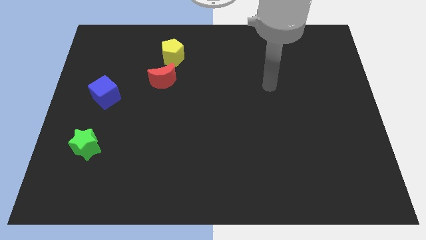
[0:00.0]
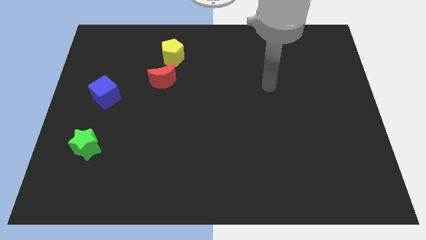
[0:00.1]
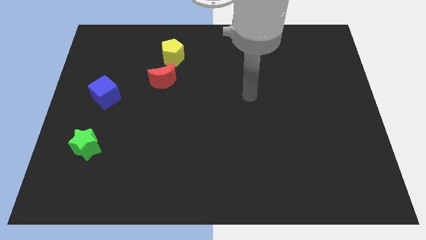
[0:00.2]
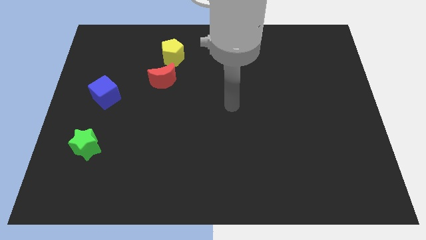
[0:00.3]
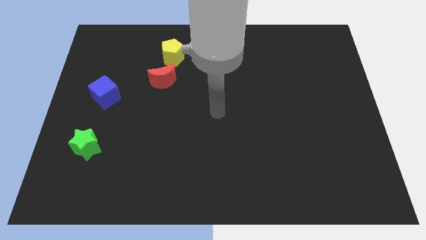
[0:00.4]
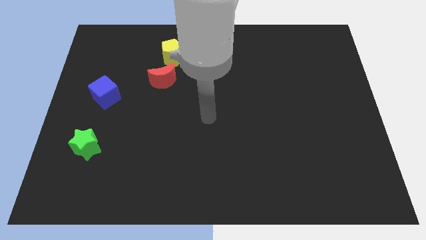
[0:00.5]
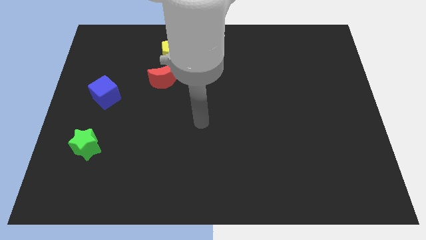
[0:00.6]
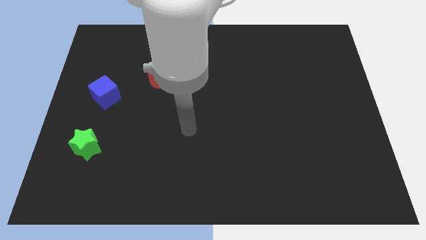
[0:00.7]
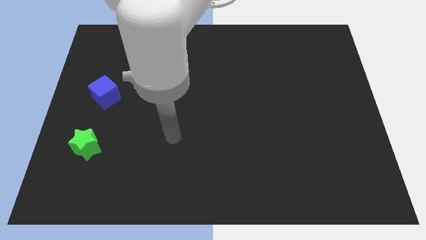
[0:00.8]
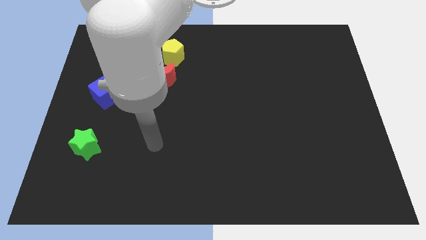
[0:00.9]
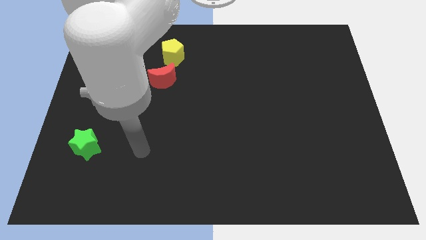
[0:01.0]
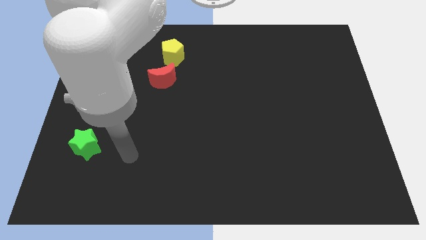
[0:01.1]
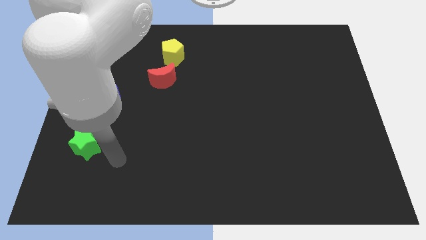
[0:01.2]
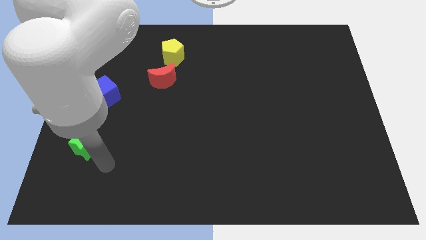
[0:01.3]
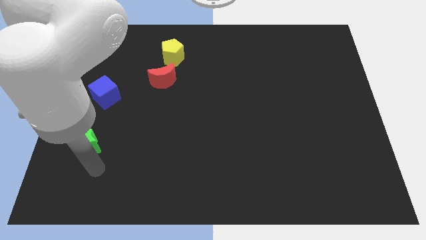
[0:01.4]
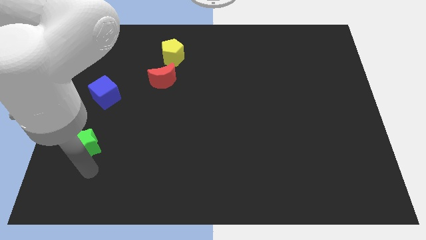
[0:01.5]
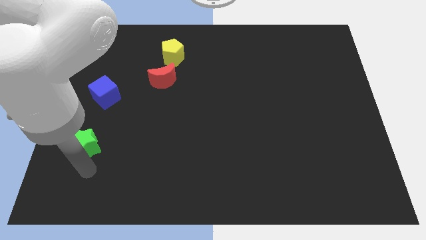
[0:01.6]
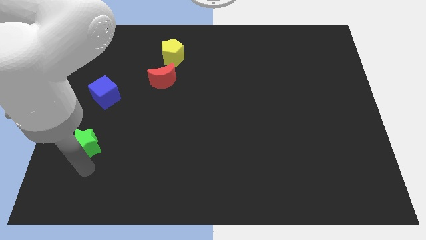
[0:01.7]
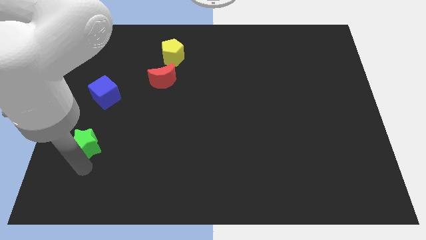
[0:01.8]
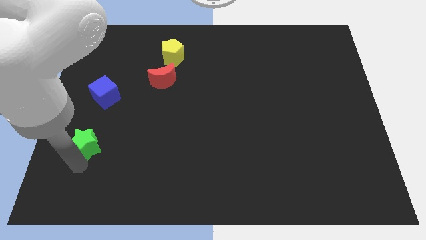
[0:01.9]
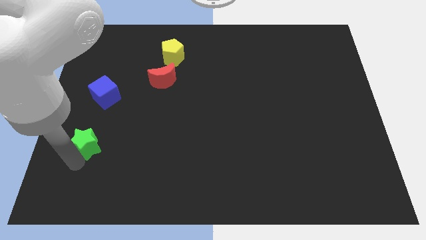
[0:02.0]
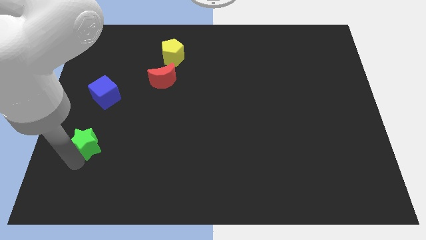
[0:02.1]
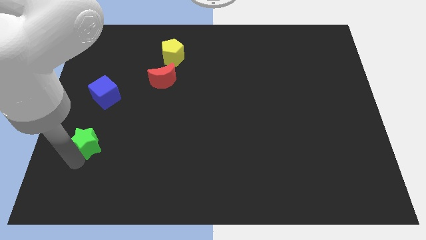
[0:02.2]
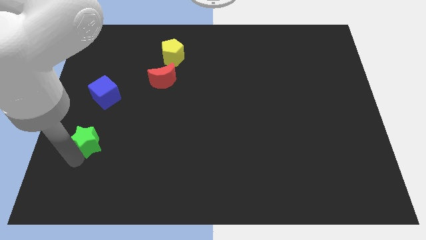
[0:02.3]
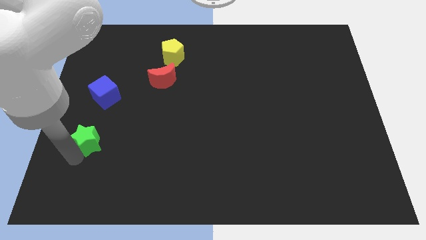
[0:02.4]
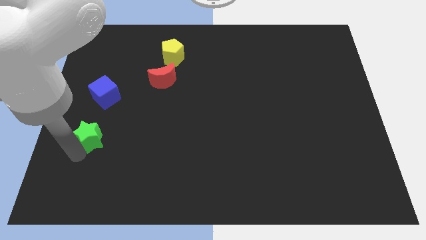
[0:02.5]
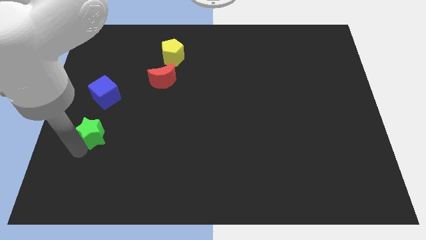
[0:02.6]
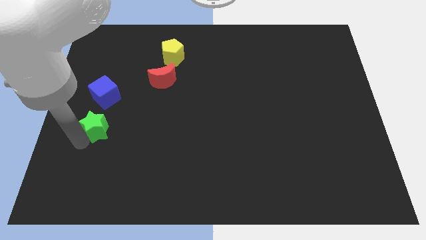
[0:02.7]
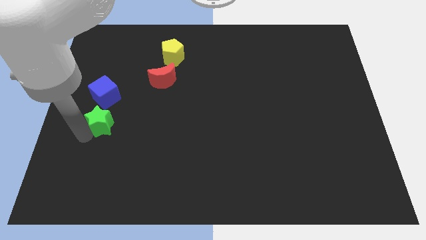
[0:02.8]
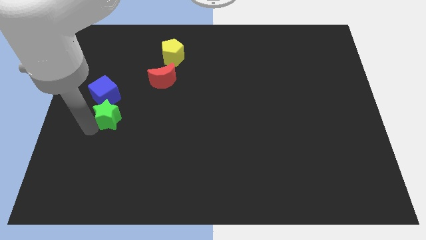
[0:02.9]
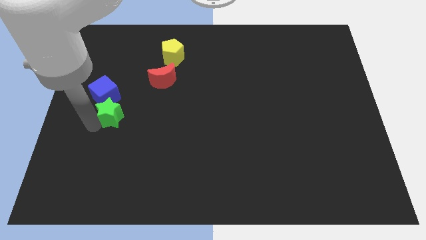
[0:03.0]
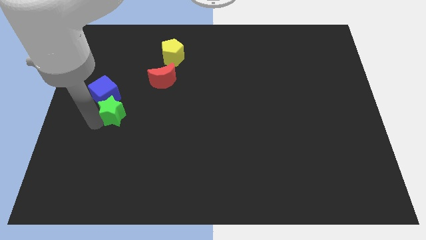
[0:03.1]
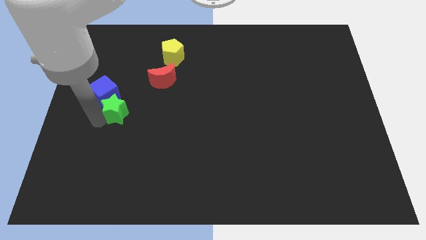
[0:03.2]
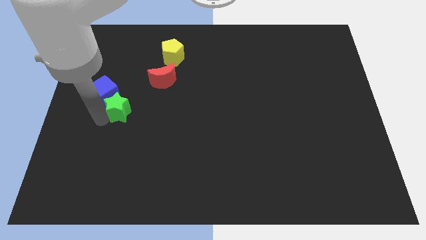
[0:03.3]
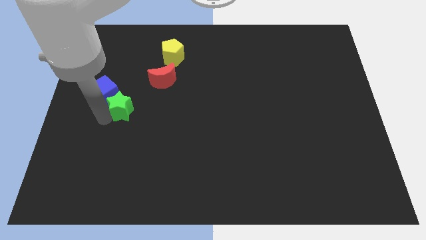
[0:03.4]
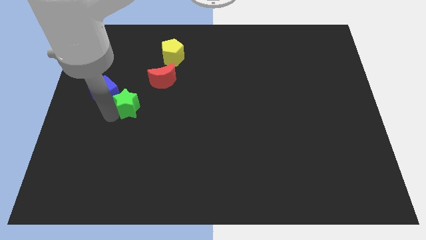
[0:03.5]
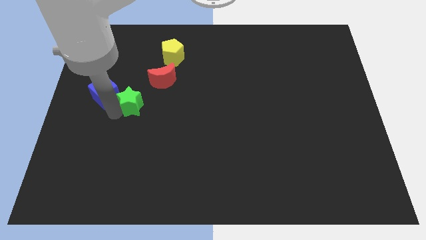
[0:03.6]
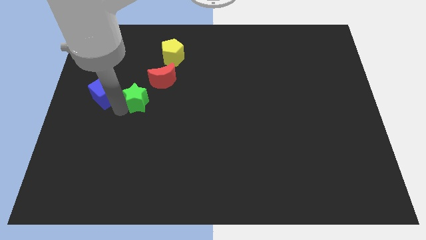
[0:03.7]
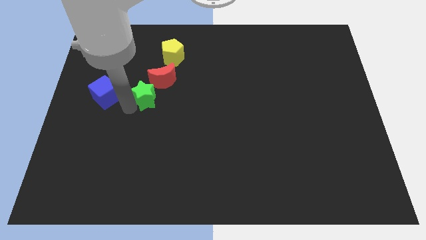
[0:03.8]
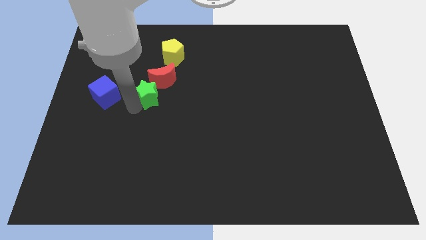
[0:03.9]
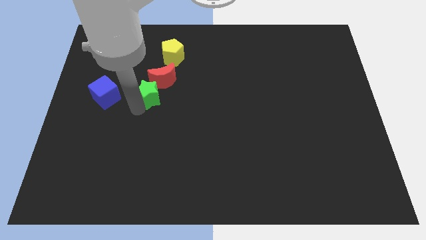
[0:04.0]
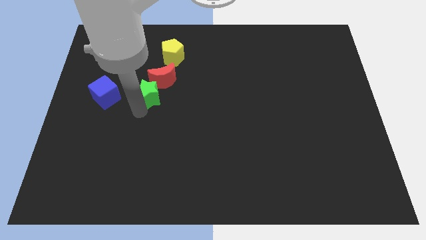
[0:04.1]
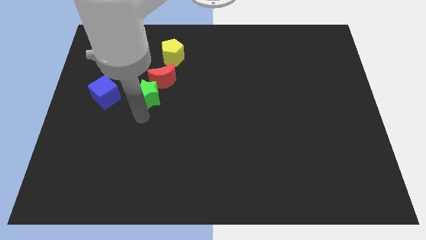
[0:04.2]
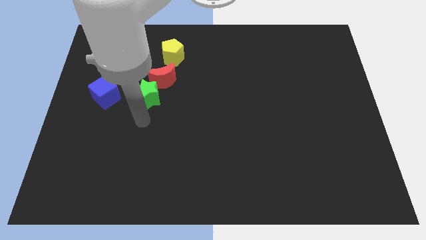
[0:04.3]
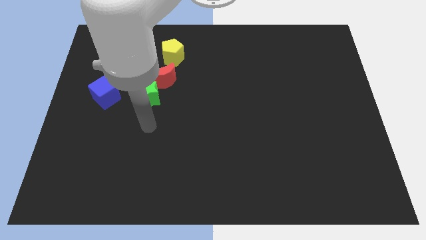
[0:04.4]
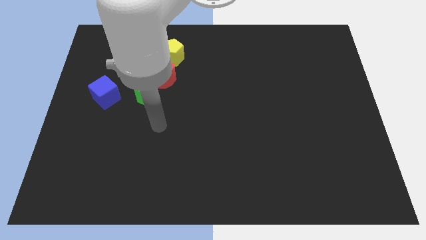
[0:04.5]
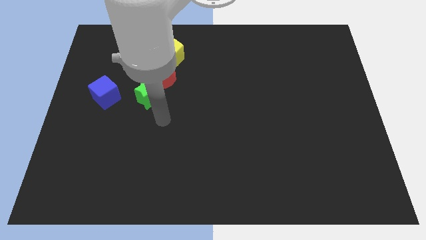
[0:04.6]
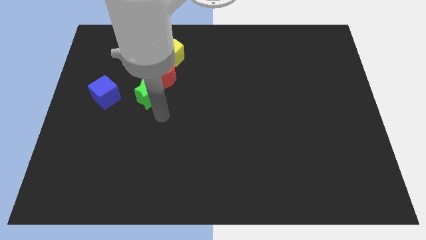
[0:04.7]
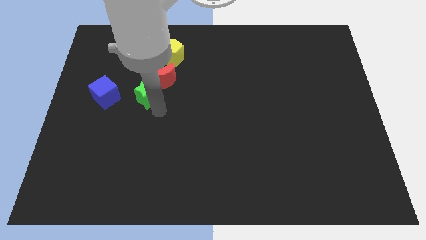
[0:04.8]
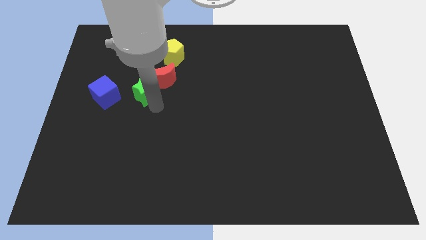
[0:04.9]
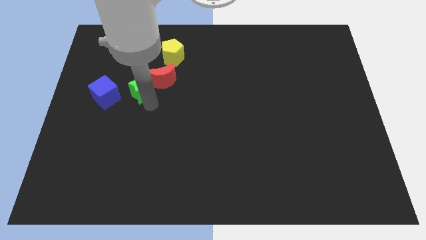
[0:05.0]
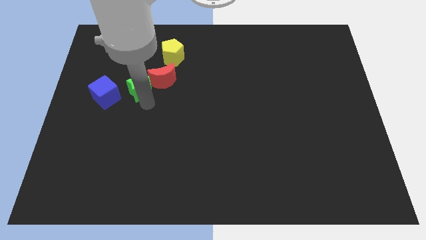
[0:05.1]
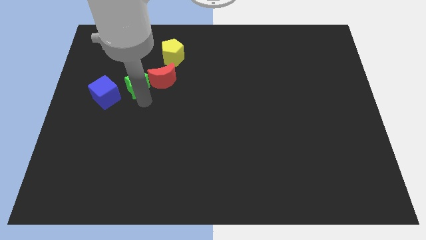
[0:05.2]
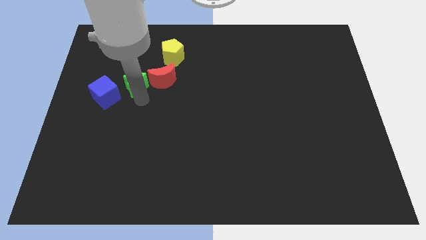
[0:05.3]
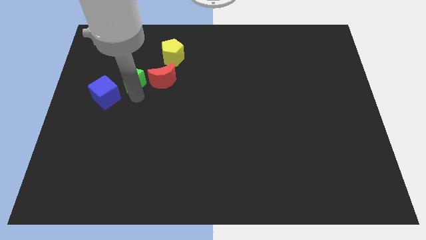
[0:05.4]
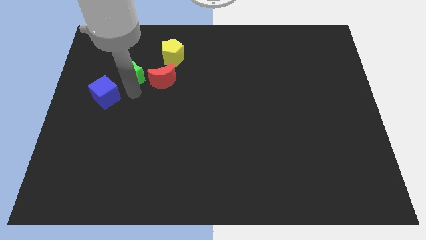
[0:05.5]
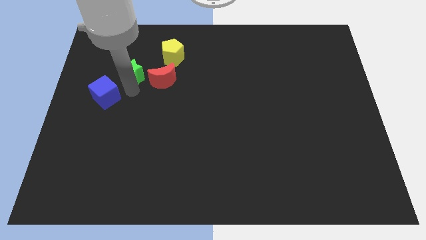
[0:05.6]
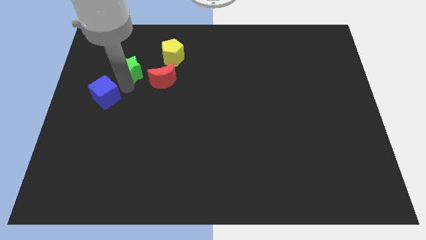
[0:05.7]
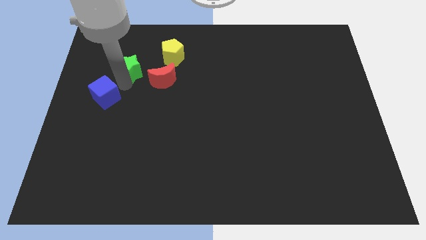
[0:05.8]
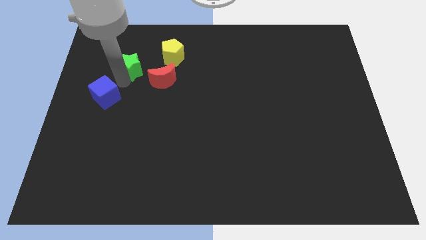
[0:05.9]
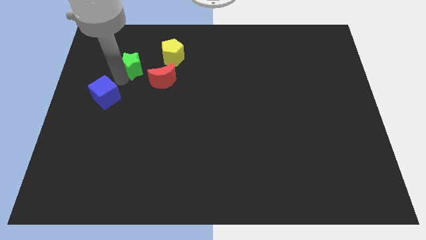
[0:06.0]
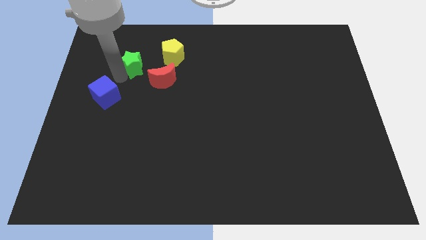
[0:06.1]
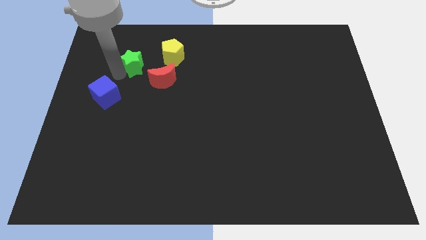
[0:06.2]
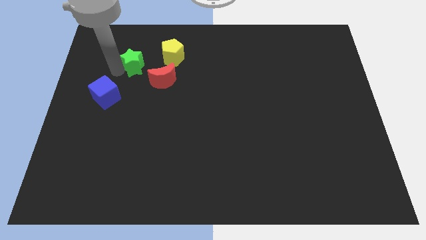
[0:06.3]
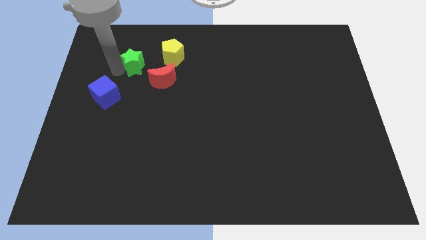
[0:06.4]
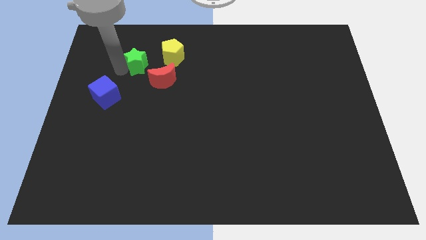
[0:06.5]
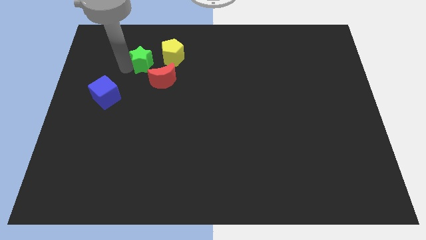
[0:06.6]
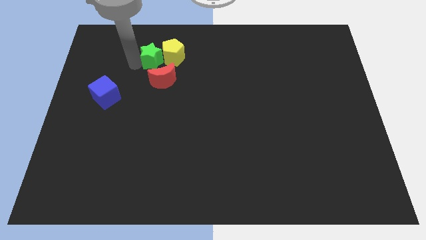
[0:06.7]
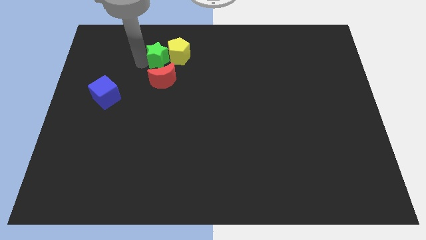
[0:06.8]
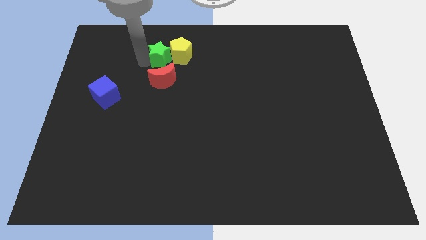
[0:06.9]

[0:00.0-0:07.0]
slide the green block close to the yellow block

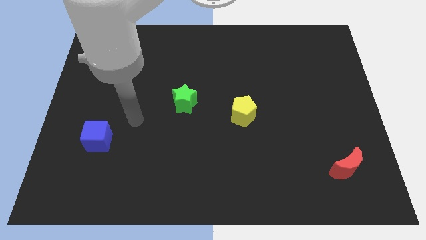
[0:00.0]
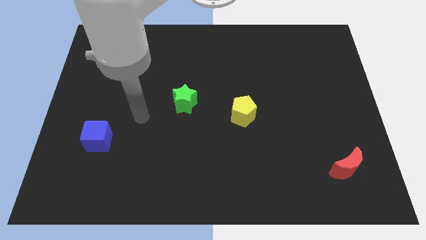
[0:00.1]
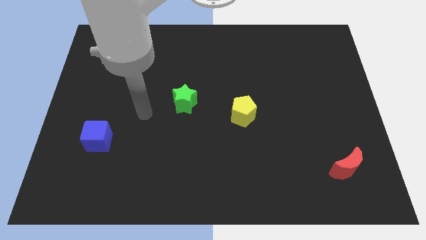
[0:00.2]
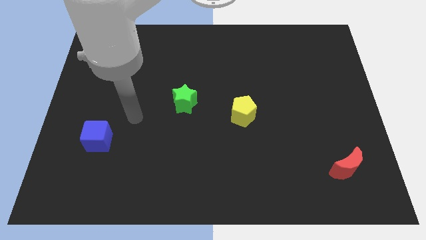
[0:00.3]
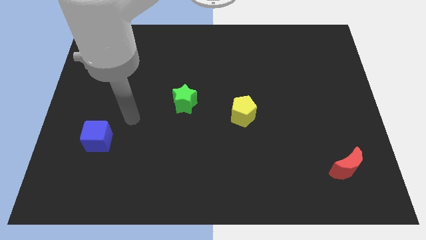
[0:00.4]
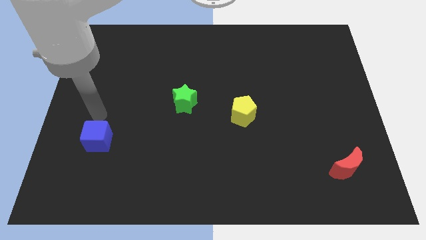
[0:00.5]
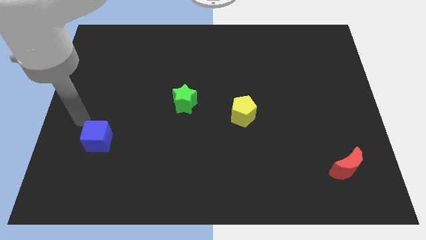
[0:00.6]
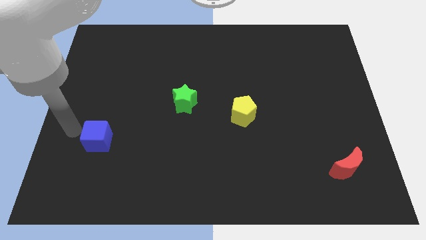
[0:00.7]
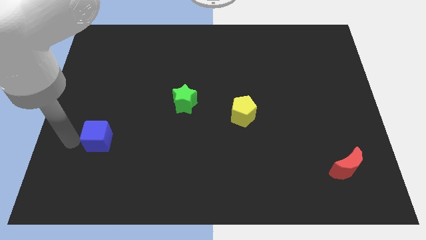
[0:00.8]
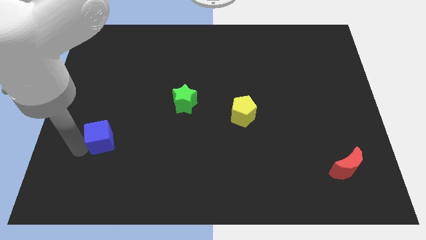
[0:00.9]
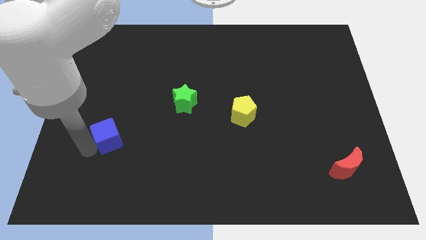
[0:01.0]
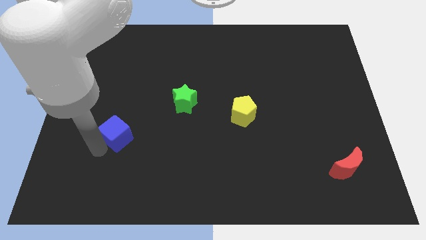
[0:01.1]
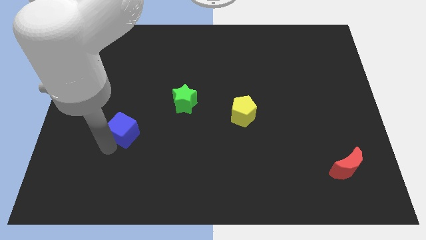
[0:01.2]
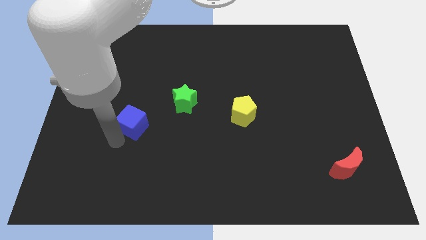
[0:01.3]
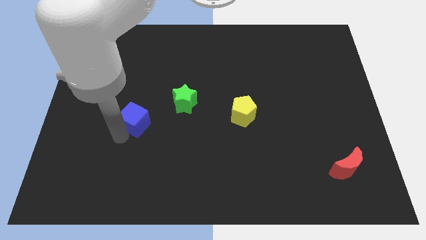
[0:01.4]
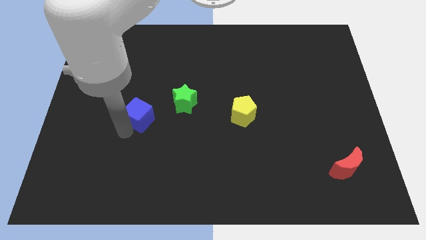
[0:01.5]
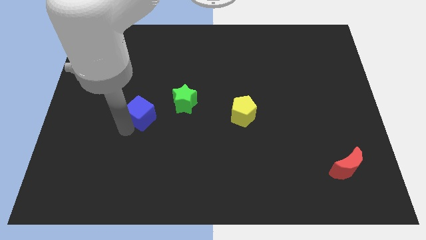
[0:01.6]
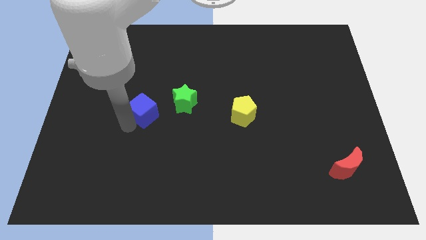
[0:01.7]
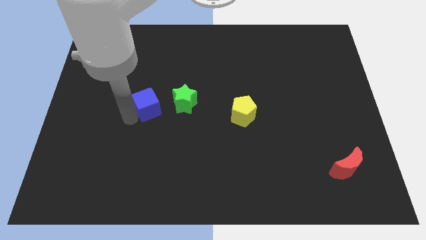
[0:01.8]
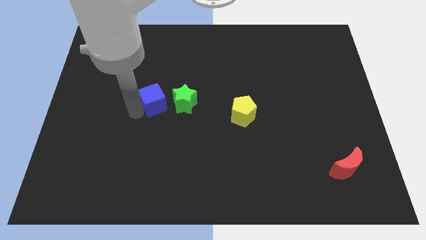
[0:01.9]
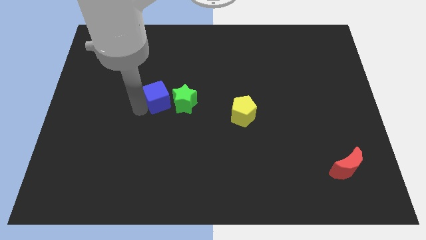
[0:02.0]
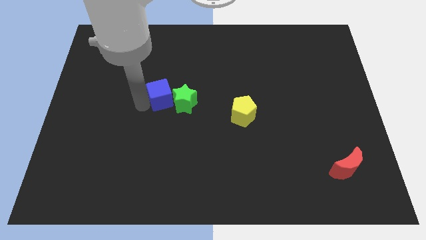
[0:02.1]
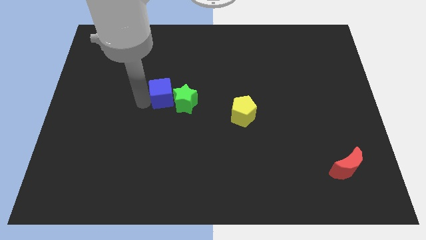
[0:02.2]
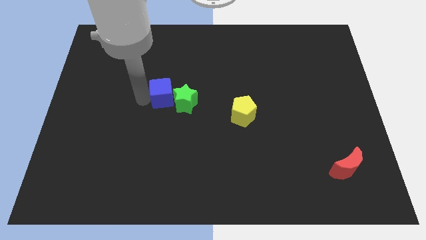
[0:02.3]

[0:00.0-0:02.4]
push the blue block close to the star
